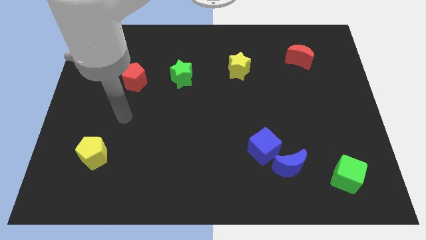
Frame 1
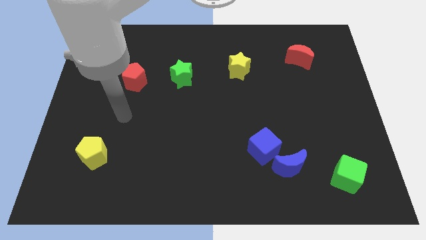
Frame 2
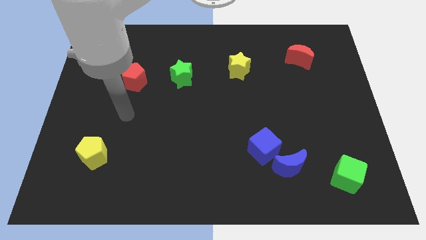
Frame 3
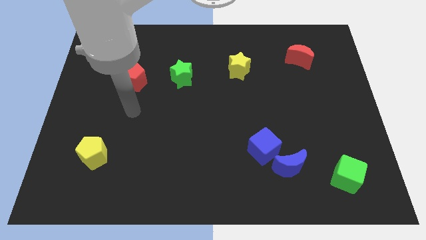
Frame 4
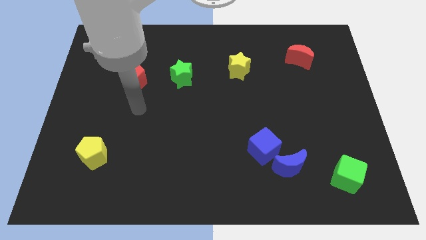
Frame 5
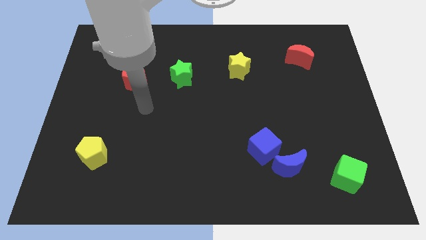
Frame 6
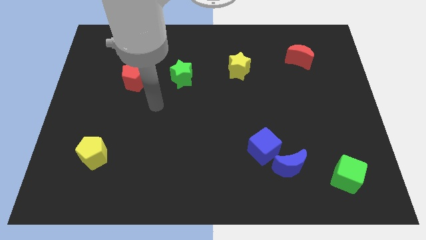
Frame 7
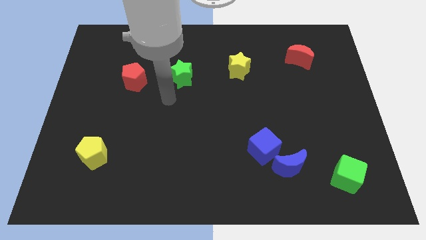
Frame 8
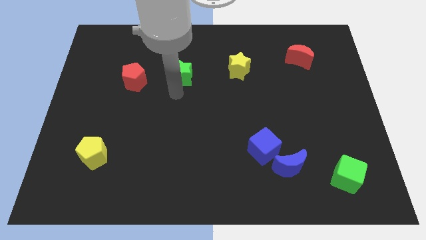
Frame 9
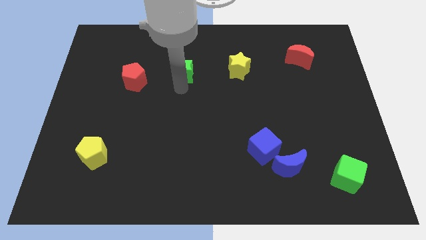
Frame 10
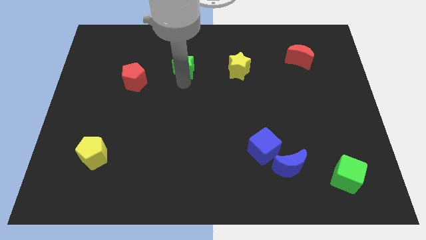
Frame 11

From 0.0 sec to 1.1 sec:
tap the green star

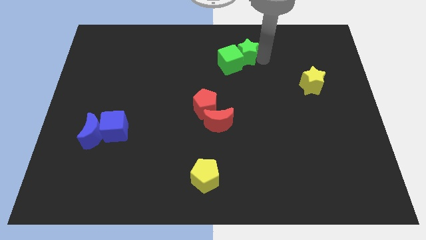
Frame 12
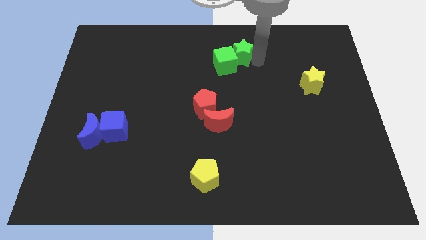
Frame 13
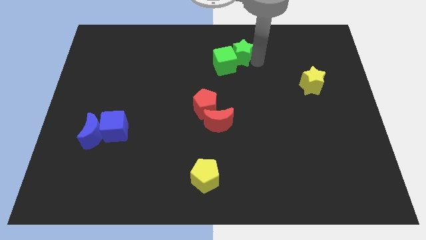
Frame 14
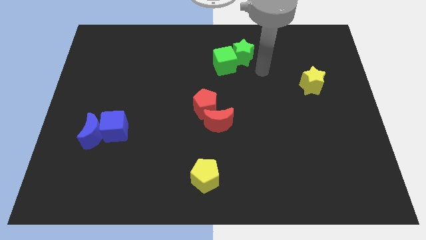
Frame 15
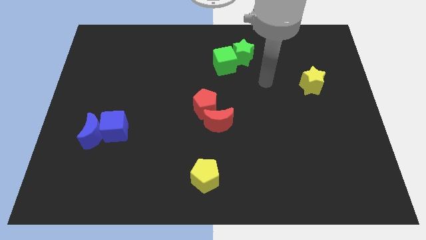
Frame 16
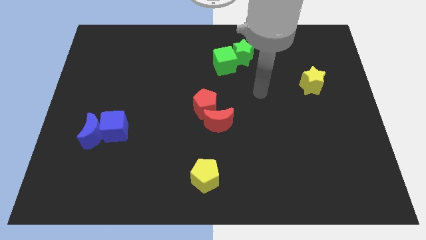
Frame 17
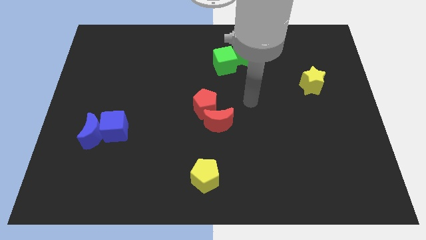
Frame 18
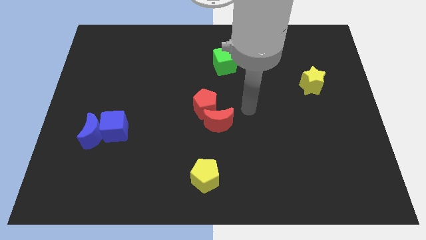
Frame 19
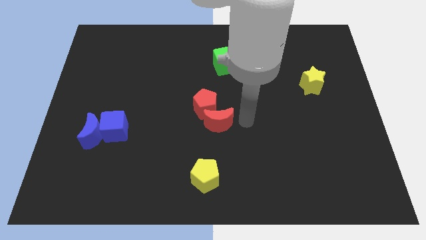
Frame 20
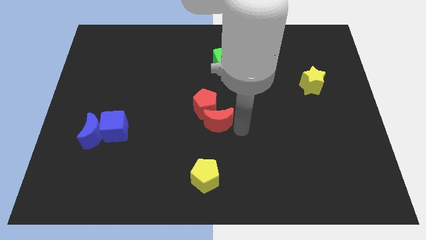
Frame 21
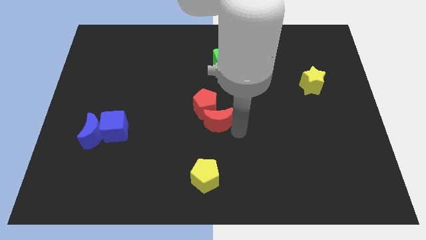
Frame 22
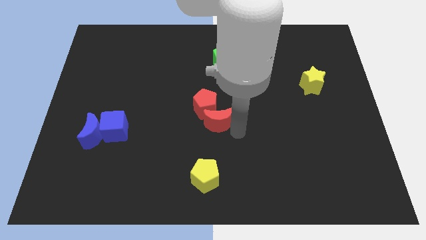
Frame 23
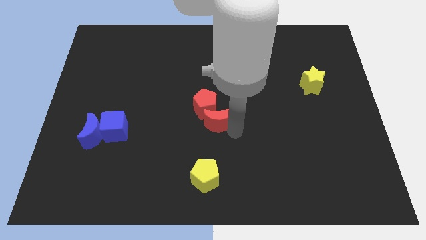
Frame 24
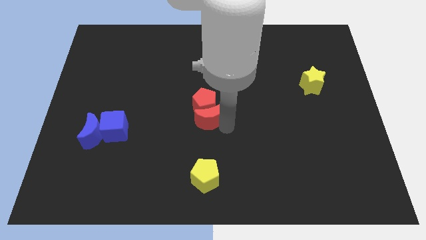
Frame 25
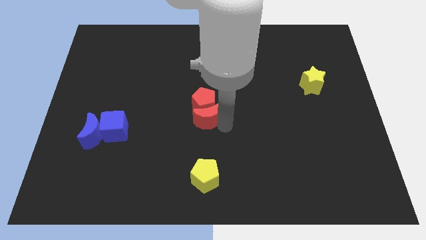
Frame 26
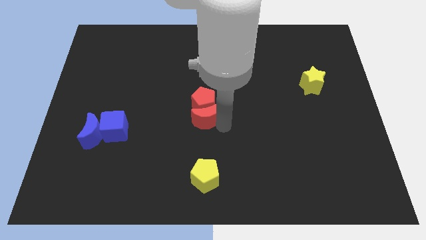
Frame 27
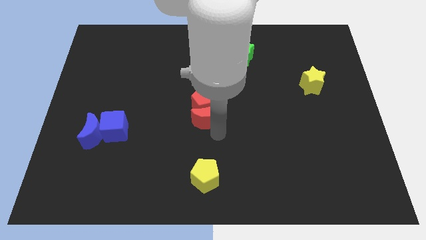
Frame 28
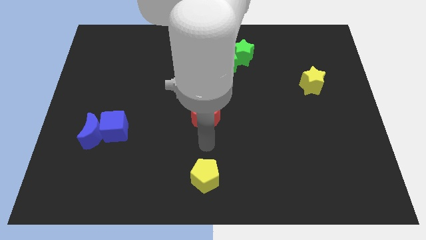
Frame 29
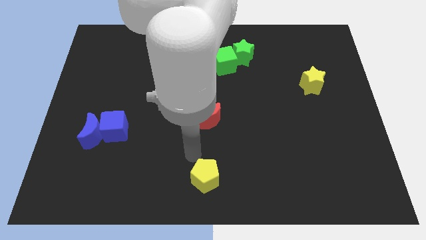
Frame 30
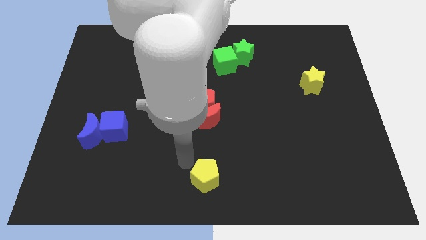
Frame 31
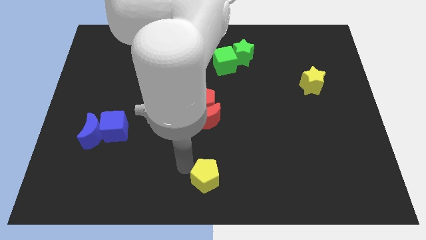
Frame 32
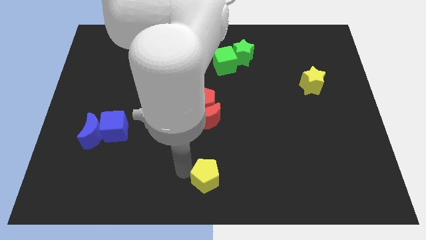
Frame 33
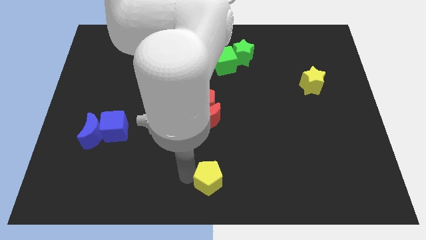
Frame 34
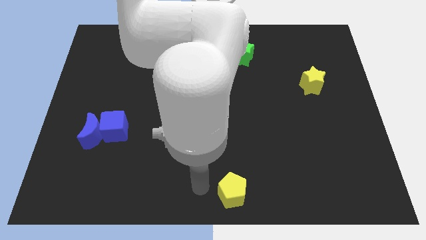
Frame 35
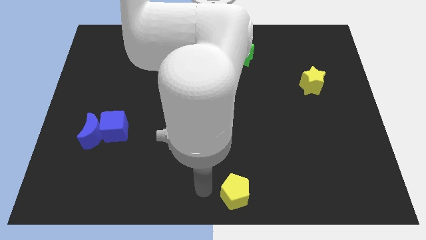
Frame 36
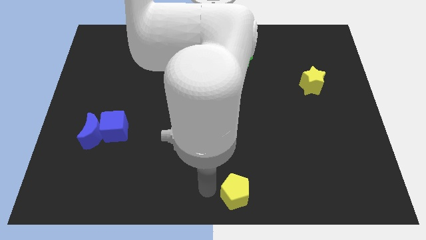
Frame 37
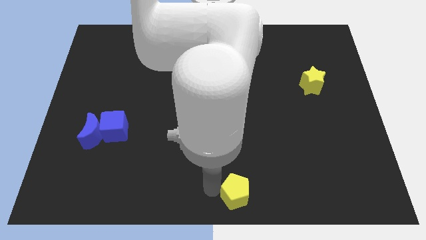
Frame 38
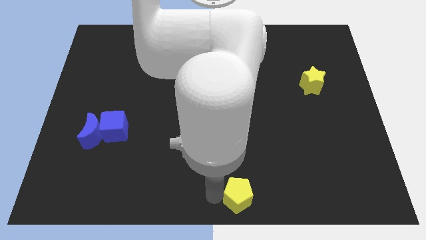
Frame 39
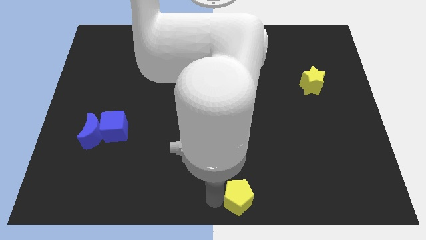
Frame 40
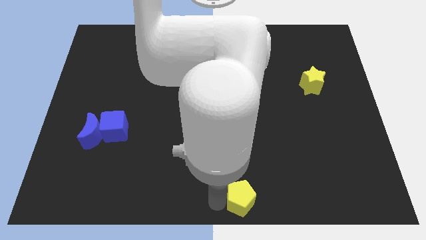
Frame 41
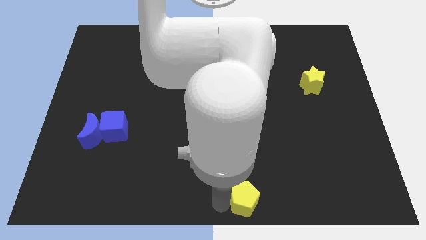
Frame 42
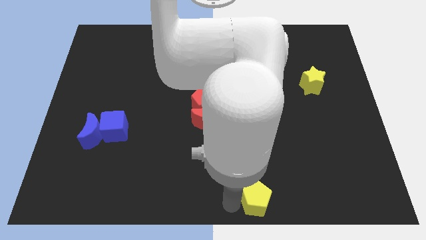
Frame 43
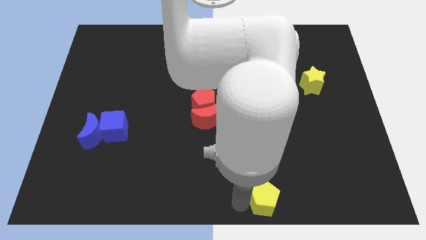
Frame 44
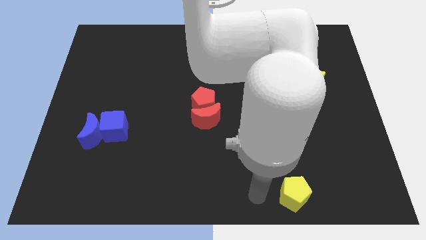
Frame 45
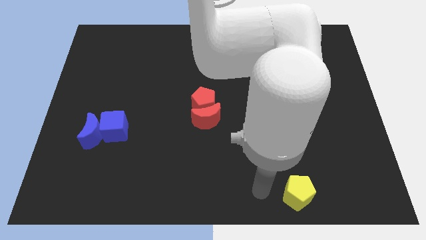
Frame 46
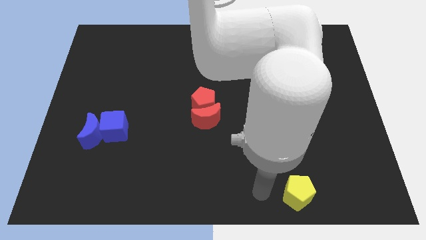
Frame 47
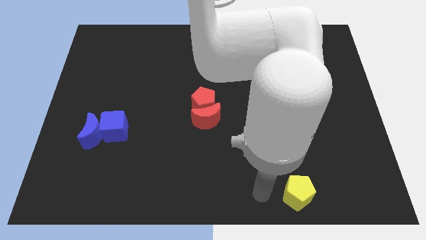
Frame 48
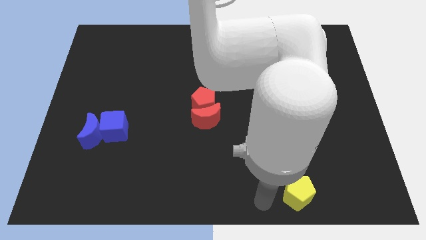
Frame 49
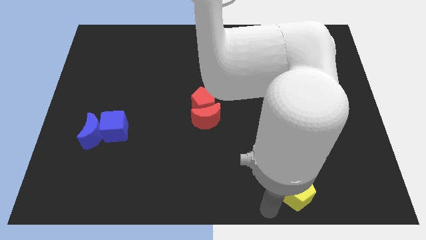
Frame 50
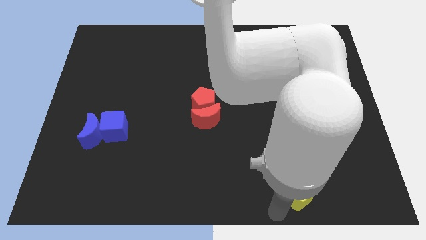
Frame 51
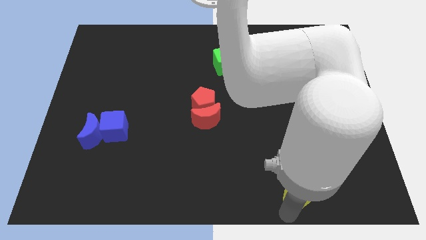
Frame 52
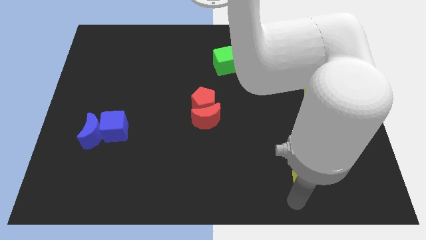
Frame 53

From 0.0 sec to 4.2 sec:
move the yellow pentagon to the left side

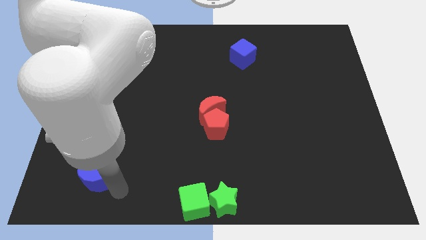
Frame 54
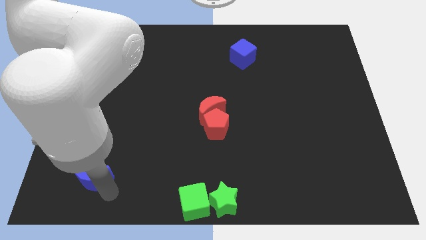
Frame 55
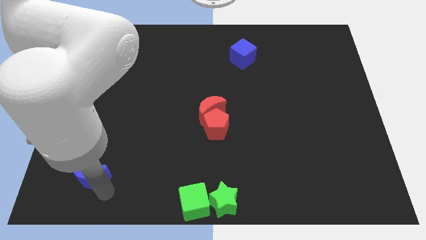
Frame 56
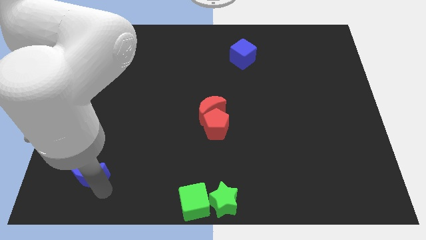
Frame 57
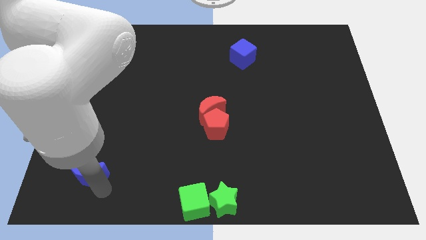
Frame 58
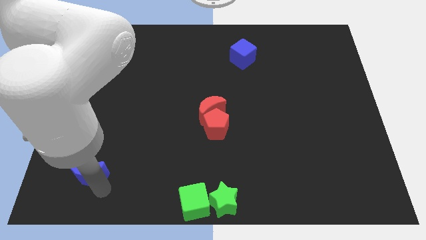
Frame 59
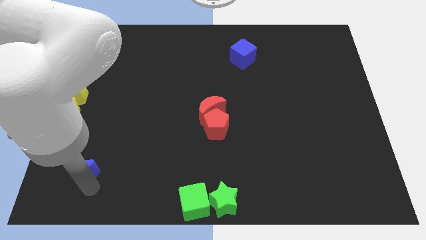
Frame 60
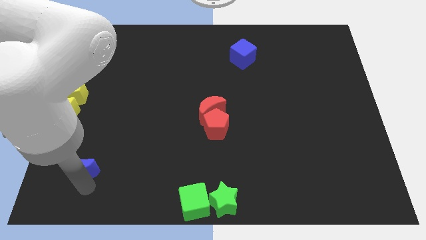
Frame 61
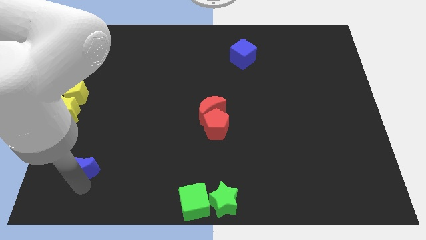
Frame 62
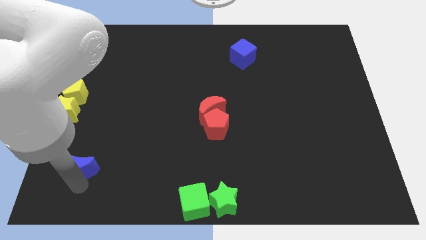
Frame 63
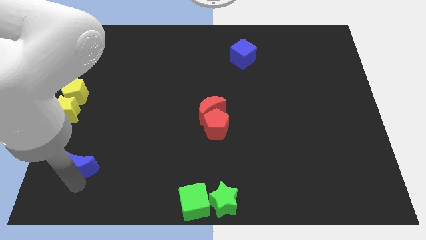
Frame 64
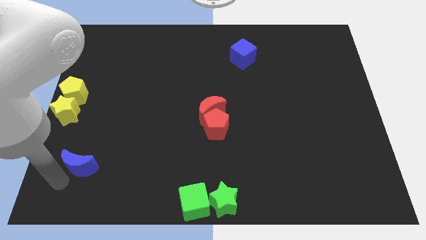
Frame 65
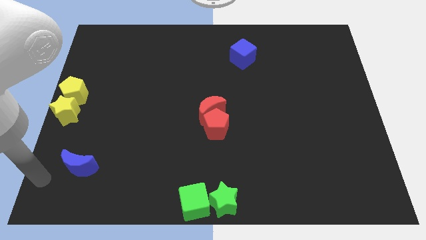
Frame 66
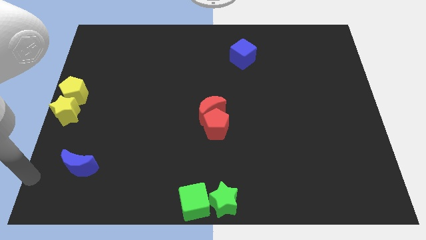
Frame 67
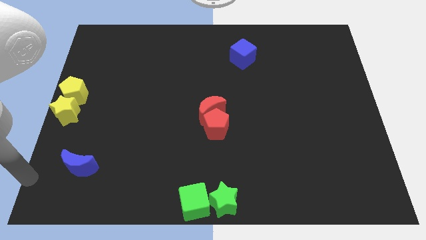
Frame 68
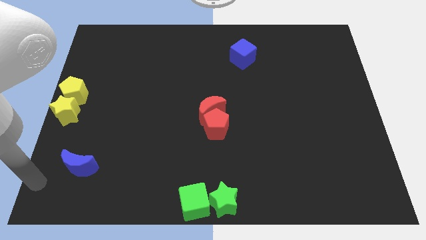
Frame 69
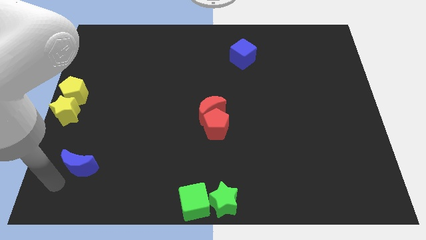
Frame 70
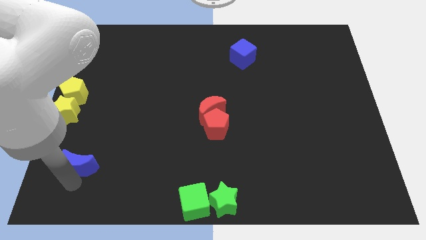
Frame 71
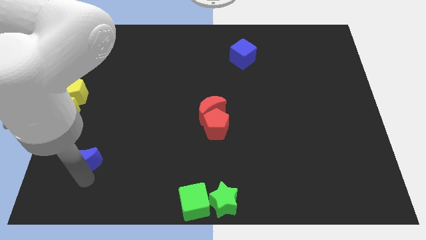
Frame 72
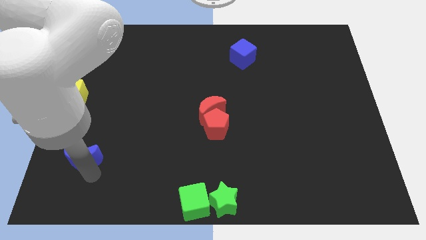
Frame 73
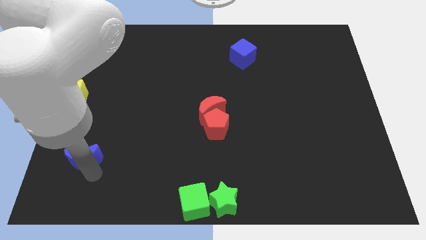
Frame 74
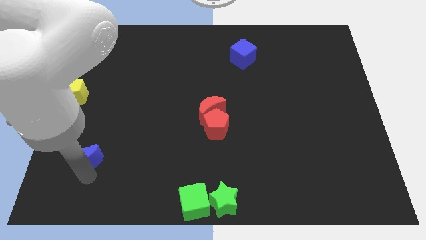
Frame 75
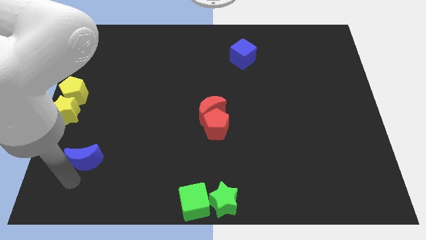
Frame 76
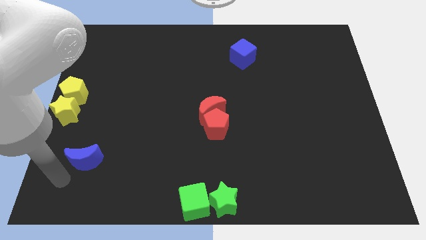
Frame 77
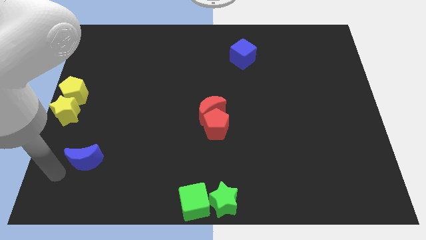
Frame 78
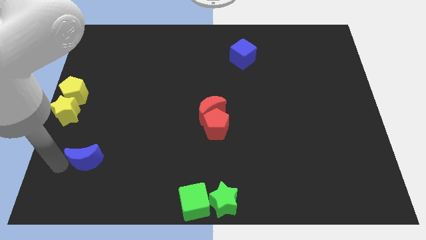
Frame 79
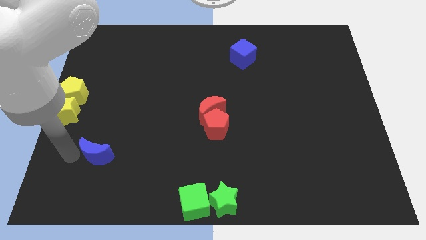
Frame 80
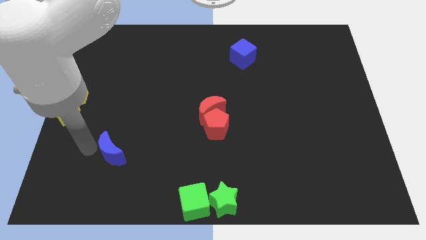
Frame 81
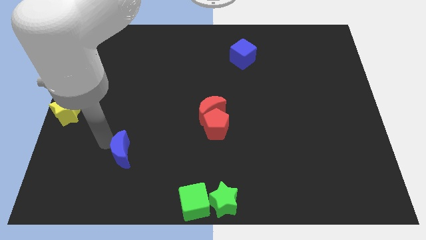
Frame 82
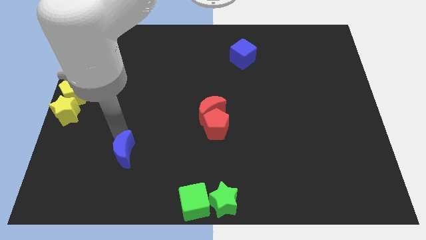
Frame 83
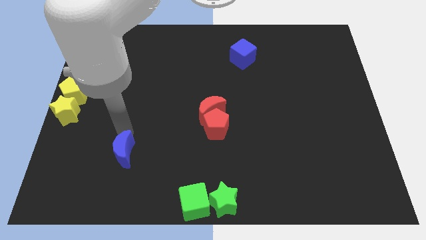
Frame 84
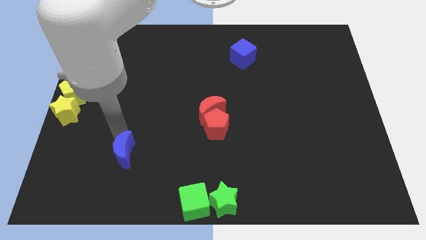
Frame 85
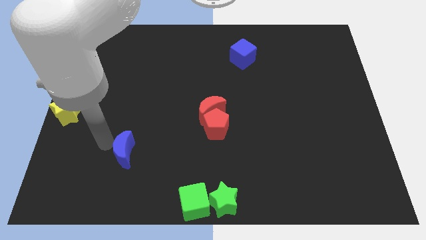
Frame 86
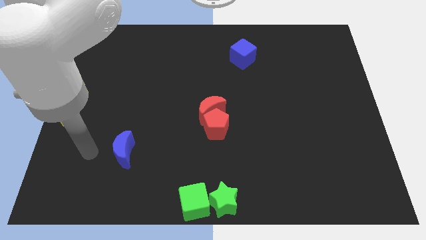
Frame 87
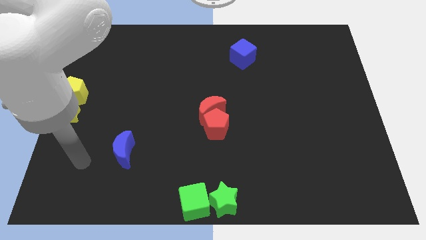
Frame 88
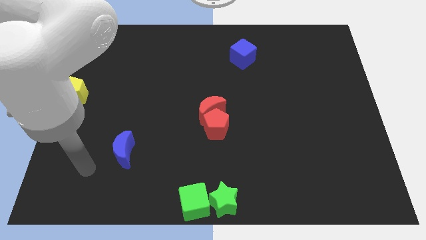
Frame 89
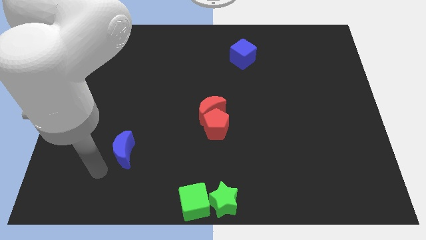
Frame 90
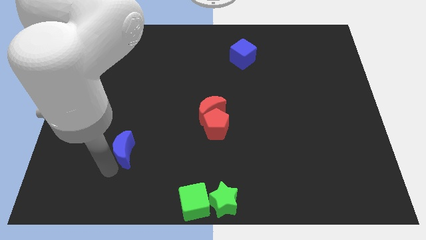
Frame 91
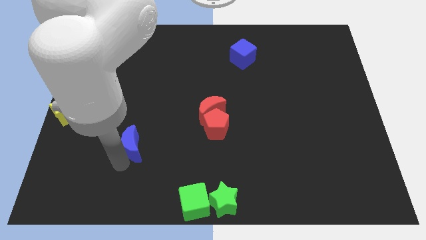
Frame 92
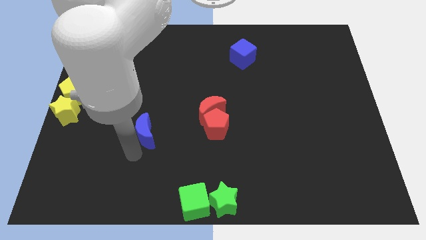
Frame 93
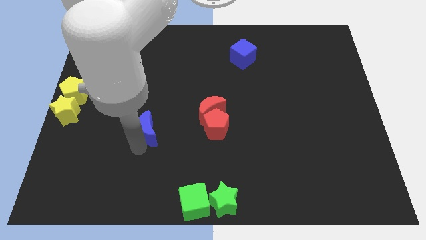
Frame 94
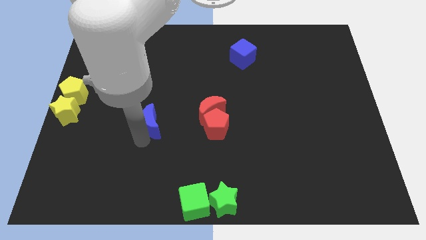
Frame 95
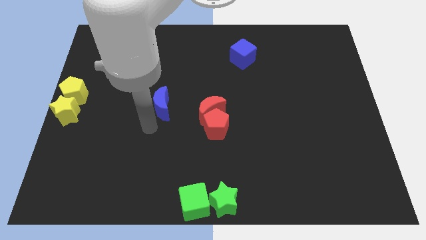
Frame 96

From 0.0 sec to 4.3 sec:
move the blue moon to the left of the red pentagon
